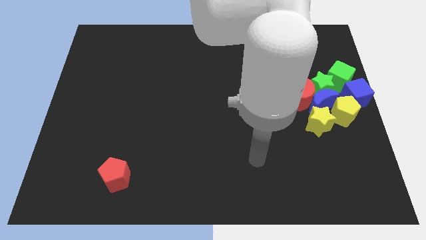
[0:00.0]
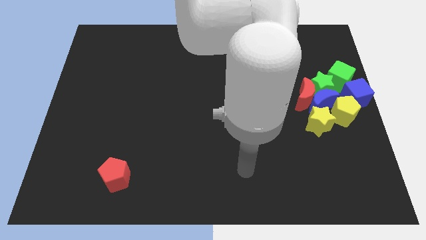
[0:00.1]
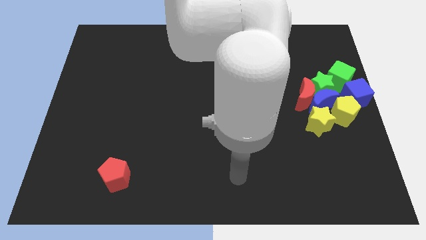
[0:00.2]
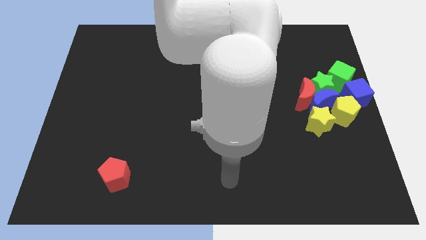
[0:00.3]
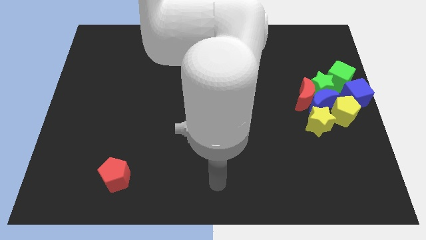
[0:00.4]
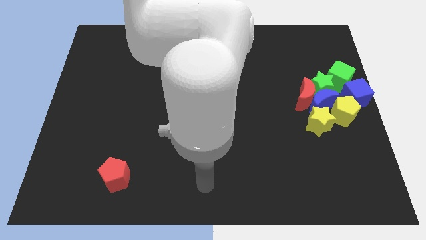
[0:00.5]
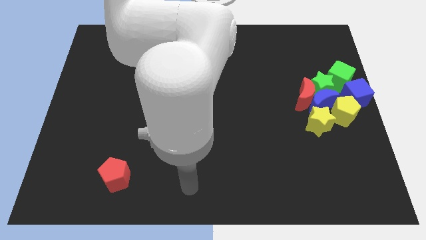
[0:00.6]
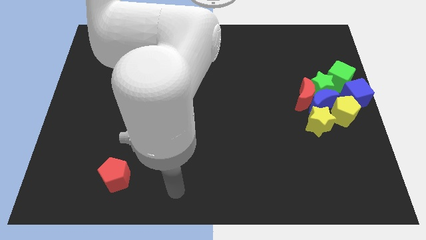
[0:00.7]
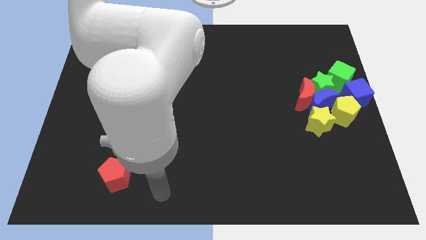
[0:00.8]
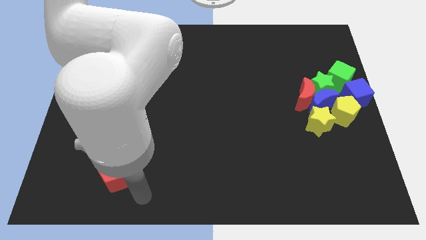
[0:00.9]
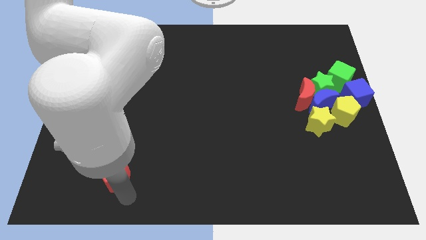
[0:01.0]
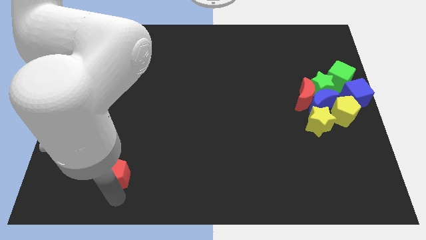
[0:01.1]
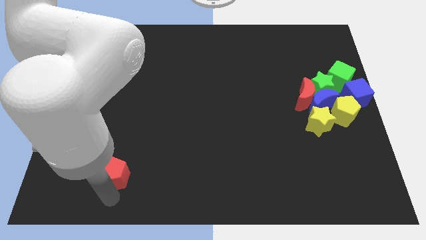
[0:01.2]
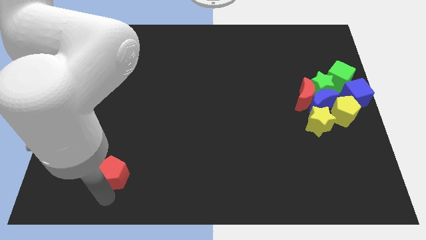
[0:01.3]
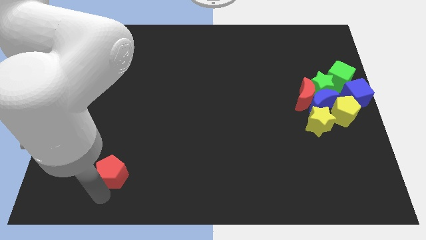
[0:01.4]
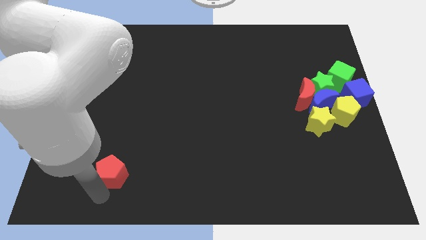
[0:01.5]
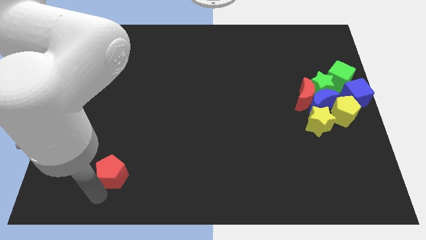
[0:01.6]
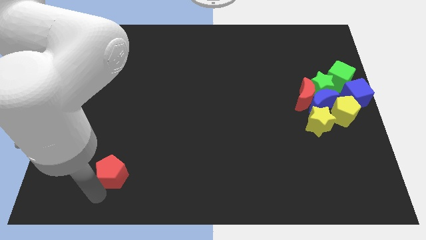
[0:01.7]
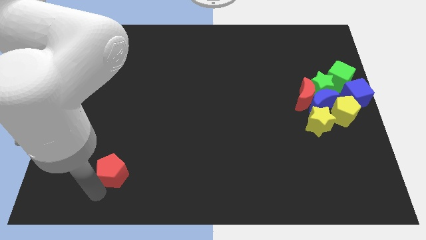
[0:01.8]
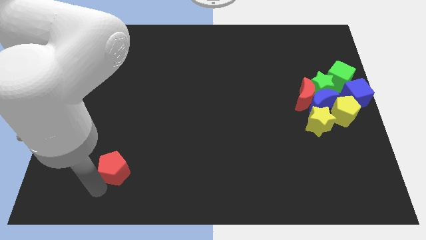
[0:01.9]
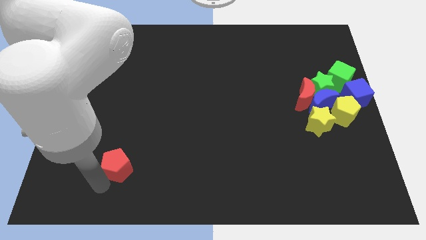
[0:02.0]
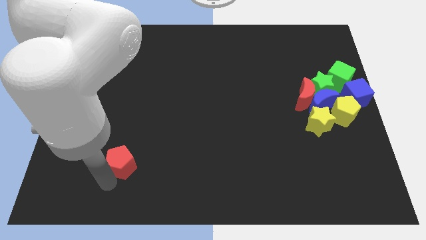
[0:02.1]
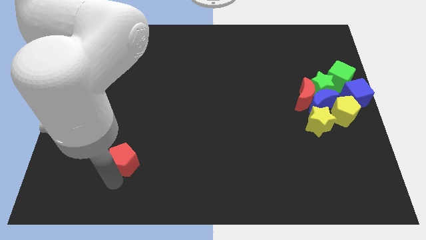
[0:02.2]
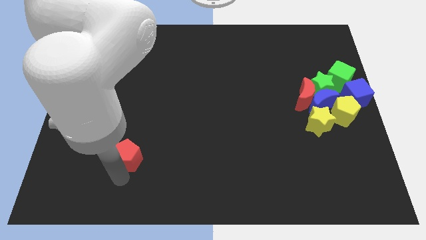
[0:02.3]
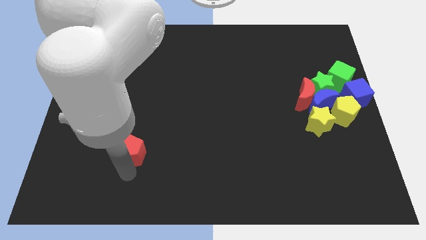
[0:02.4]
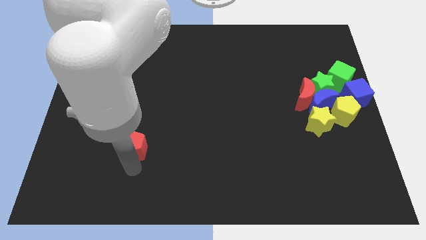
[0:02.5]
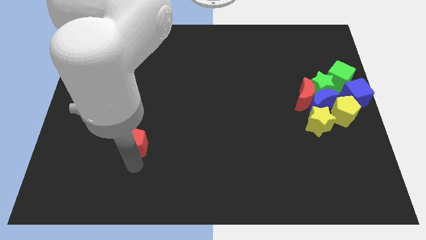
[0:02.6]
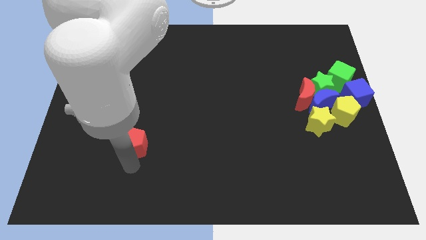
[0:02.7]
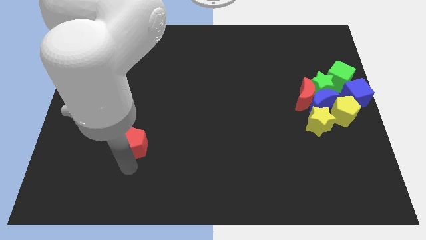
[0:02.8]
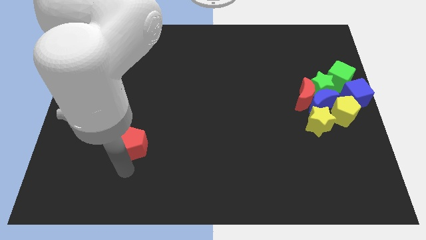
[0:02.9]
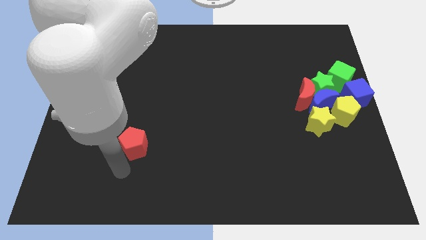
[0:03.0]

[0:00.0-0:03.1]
push the red pentagon up slightly

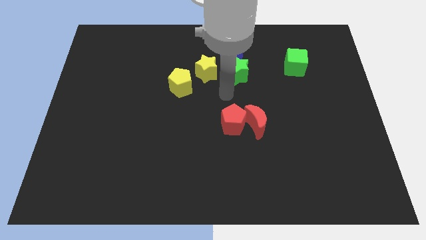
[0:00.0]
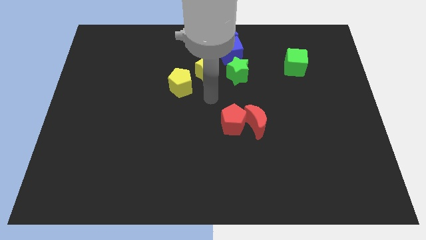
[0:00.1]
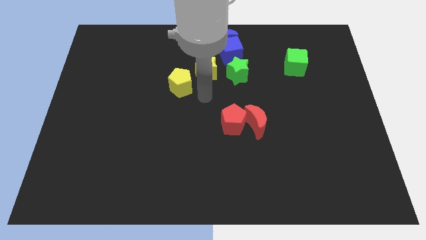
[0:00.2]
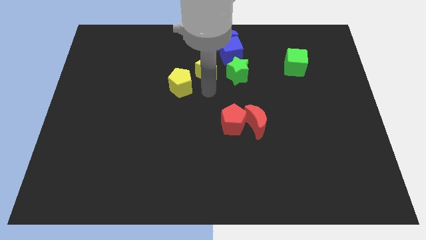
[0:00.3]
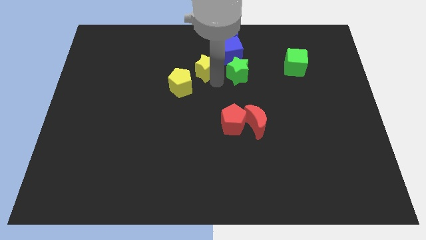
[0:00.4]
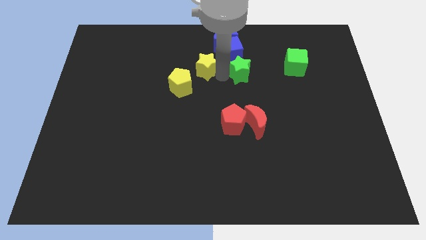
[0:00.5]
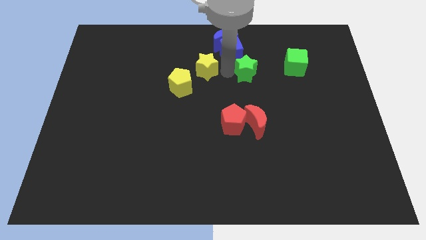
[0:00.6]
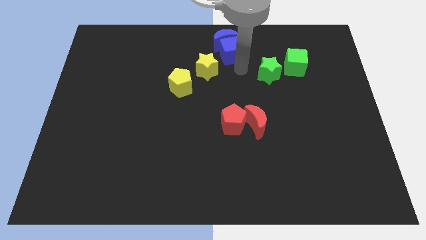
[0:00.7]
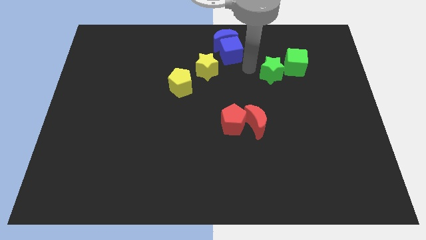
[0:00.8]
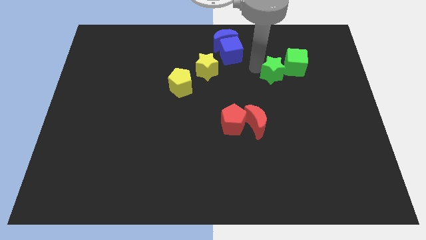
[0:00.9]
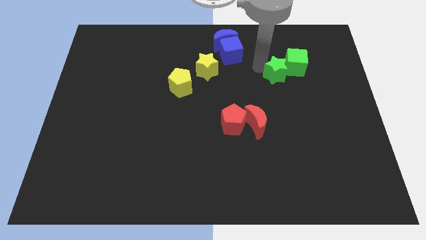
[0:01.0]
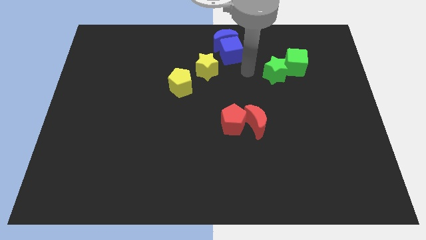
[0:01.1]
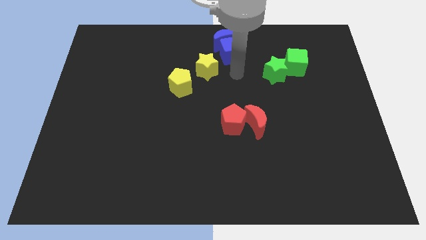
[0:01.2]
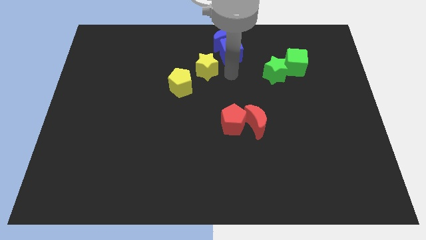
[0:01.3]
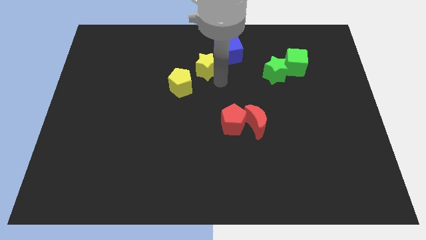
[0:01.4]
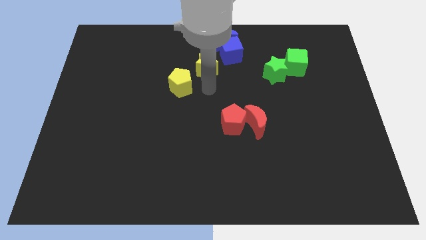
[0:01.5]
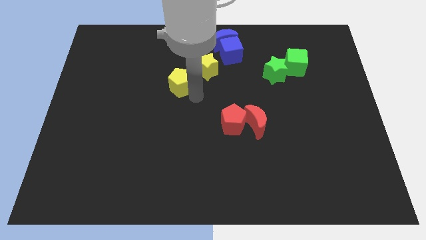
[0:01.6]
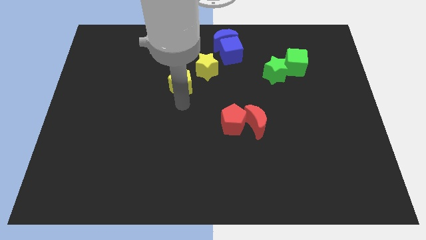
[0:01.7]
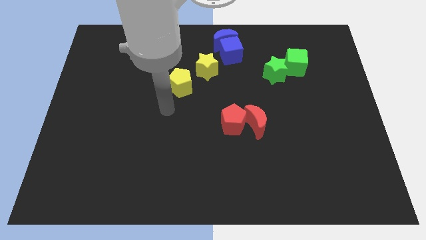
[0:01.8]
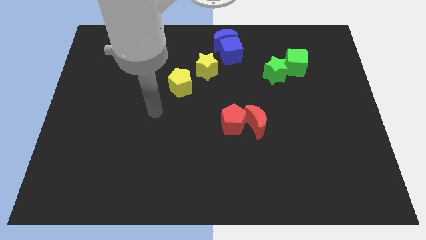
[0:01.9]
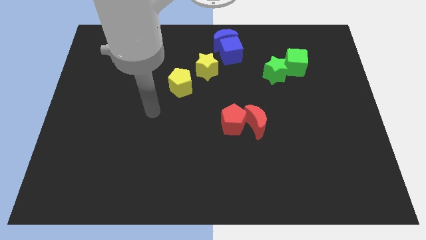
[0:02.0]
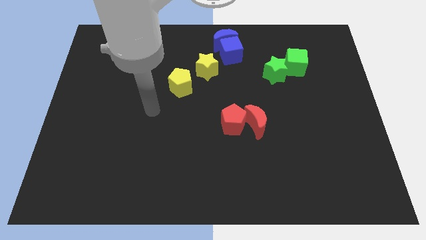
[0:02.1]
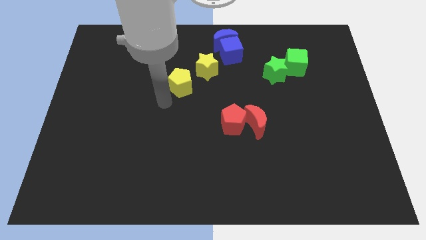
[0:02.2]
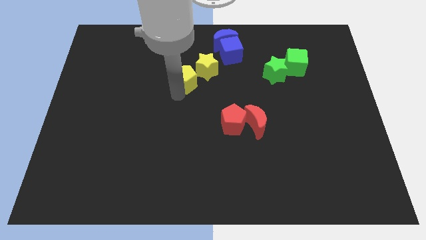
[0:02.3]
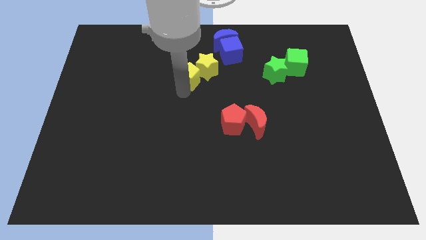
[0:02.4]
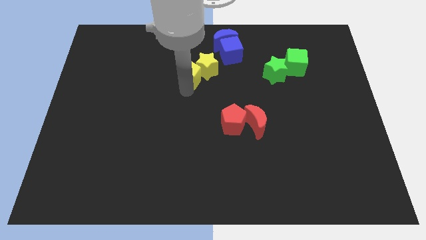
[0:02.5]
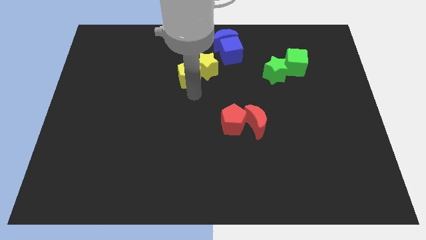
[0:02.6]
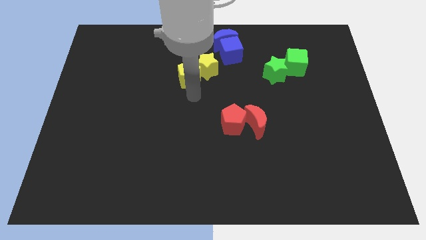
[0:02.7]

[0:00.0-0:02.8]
push yellow pentagon into the yellow star

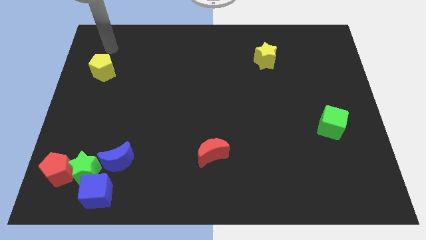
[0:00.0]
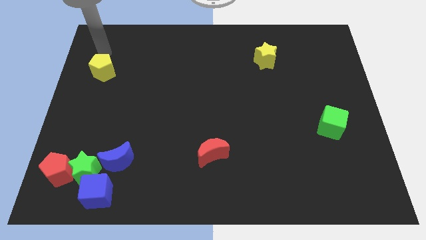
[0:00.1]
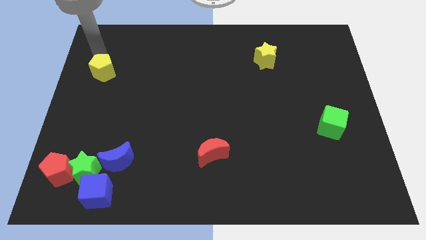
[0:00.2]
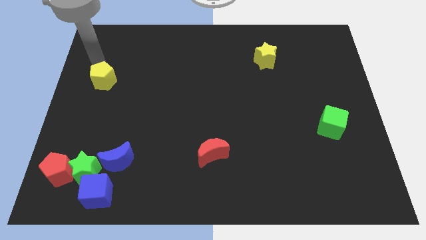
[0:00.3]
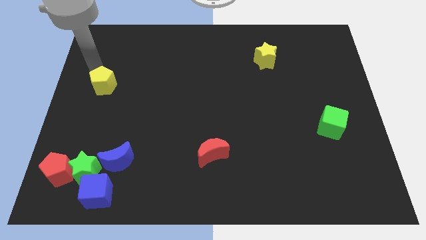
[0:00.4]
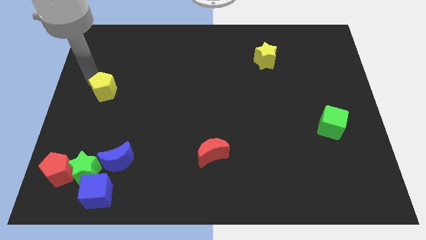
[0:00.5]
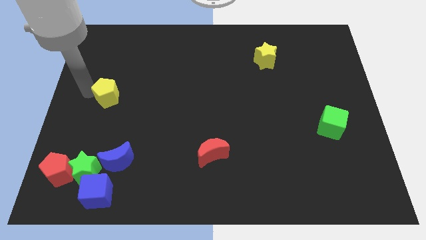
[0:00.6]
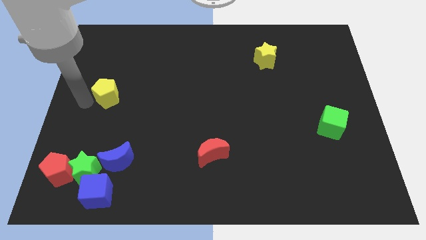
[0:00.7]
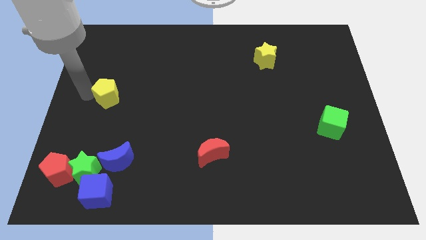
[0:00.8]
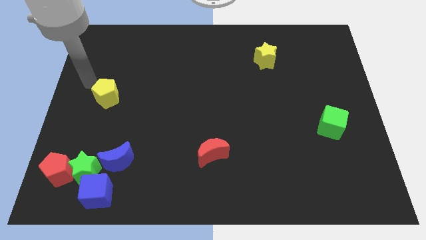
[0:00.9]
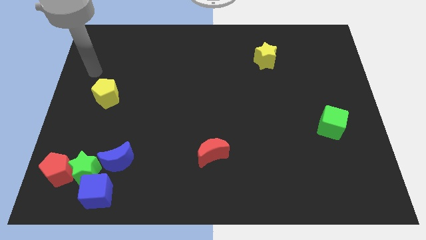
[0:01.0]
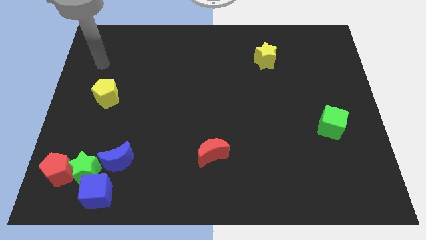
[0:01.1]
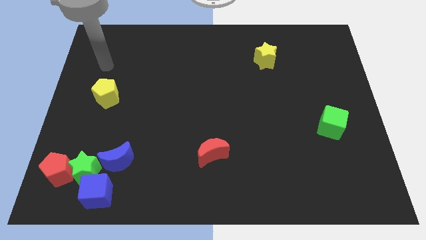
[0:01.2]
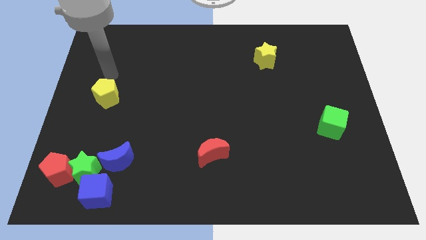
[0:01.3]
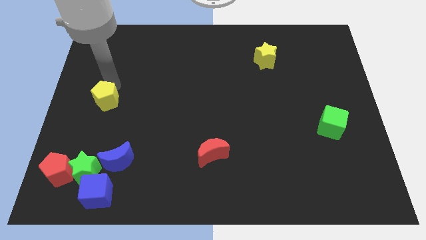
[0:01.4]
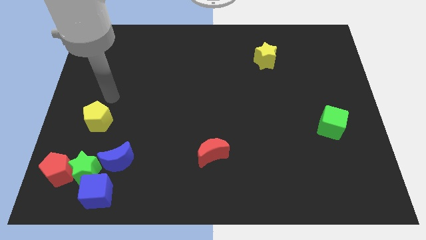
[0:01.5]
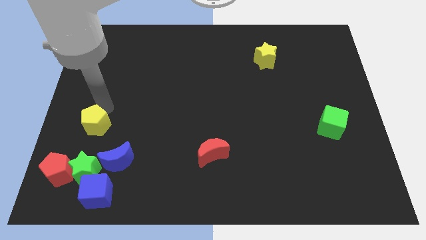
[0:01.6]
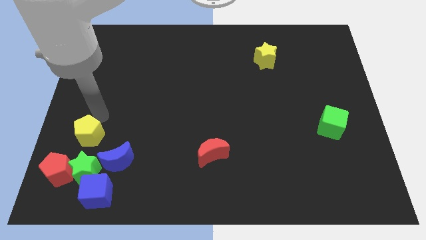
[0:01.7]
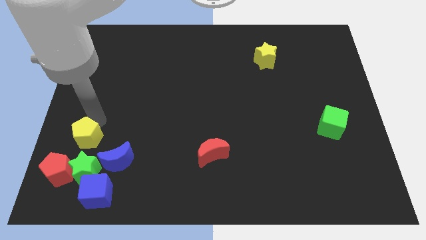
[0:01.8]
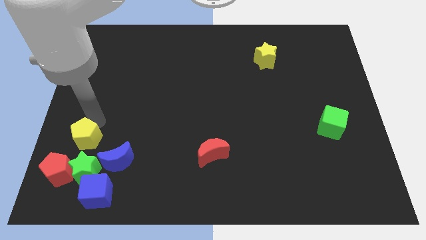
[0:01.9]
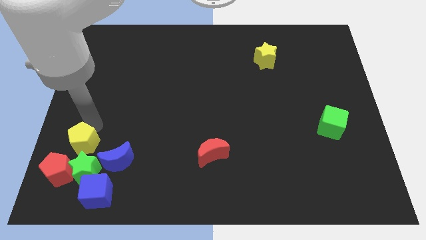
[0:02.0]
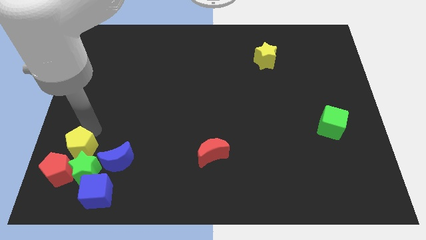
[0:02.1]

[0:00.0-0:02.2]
slide yellow pentagon towards green star

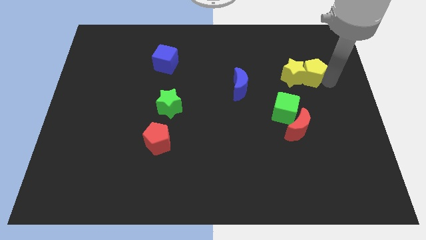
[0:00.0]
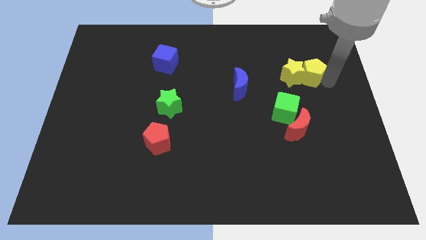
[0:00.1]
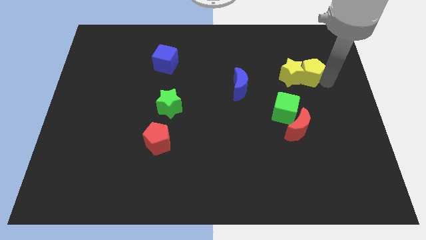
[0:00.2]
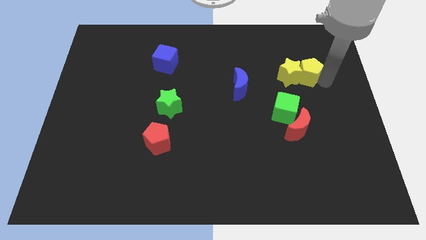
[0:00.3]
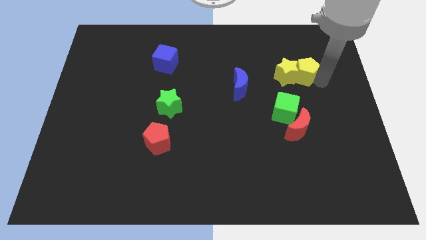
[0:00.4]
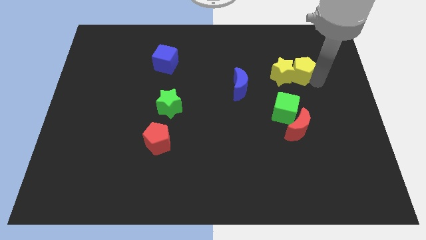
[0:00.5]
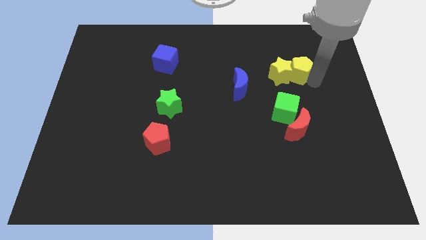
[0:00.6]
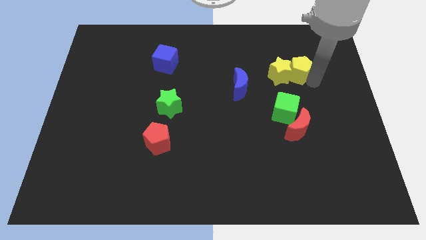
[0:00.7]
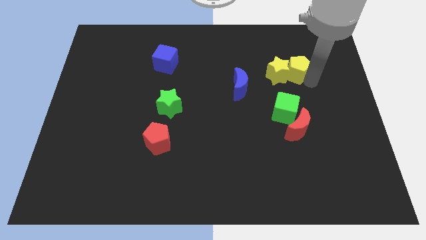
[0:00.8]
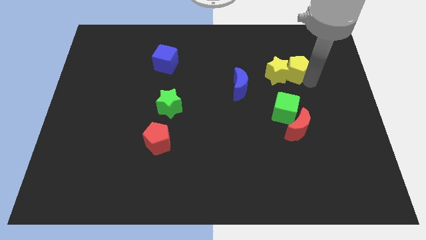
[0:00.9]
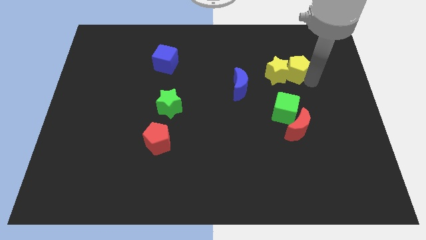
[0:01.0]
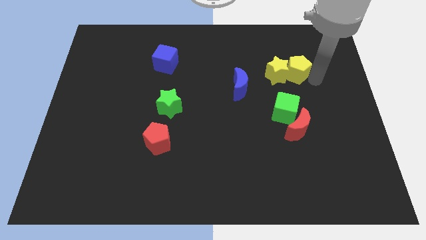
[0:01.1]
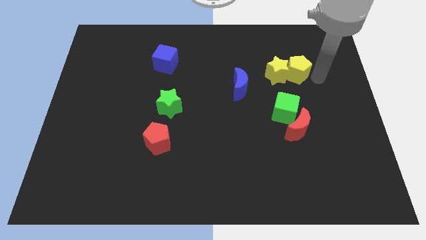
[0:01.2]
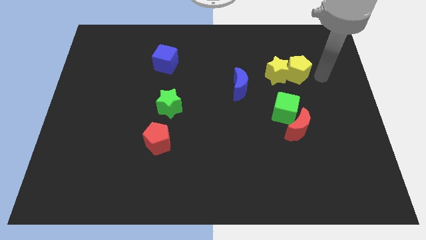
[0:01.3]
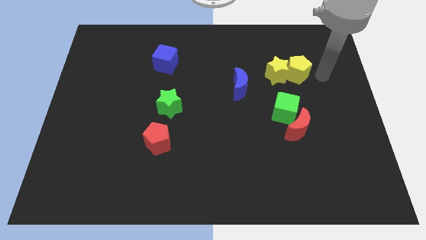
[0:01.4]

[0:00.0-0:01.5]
move the yellow pentagon and yellow star towards right
